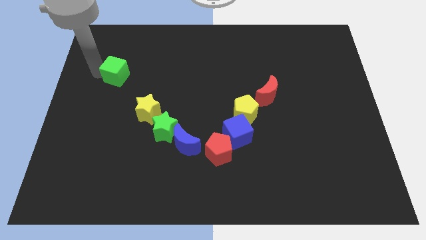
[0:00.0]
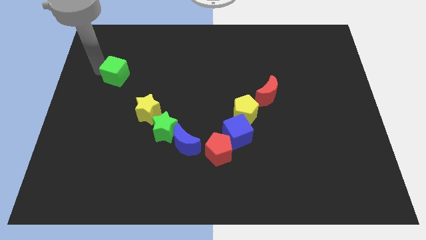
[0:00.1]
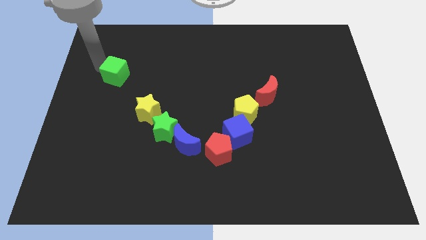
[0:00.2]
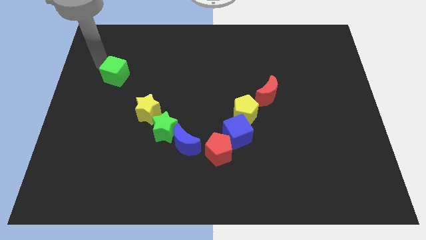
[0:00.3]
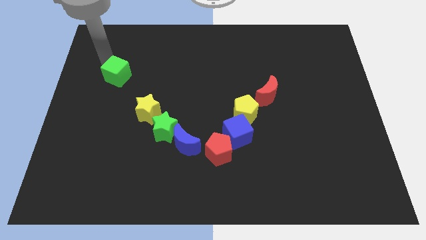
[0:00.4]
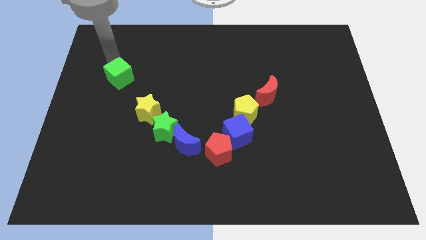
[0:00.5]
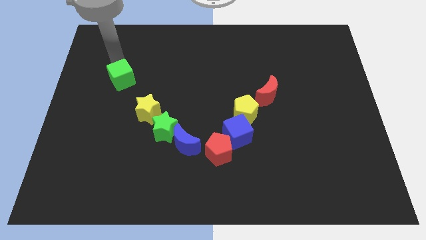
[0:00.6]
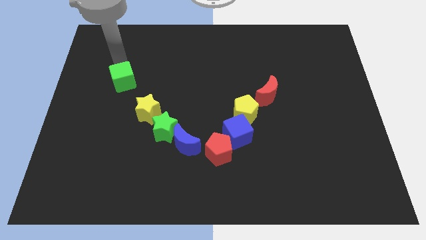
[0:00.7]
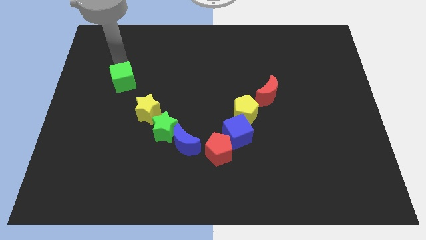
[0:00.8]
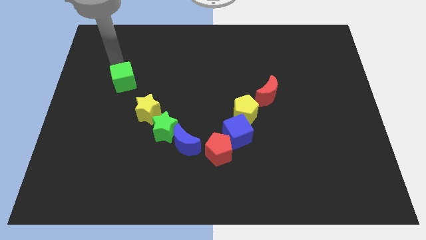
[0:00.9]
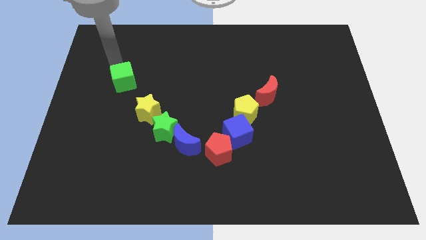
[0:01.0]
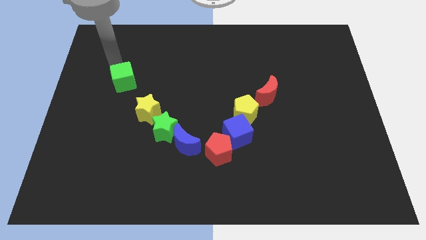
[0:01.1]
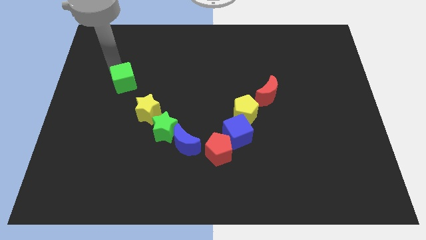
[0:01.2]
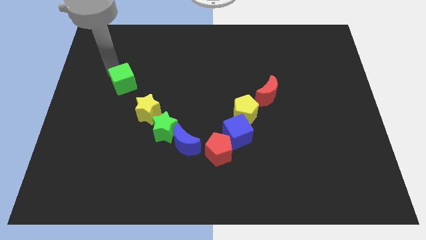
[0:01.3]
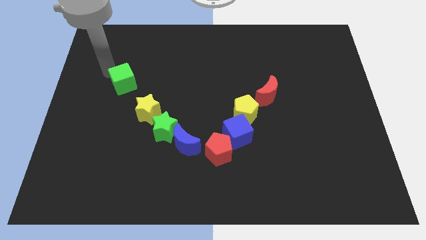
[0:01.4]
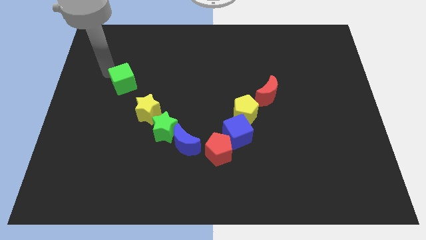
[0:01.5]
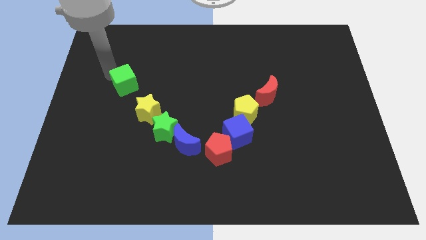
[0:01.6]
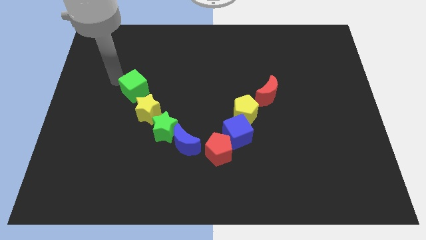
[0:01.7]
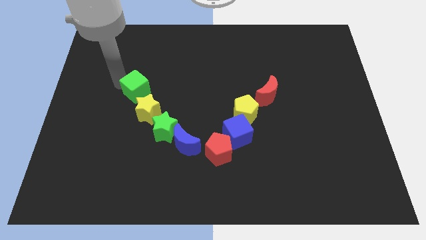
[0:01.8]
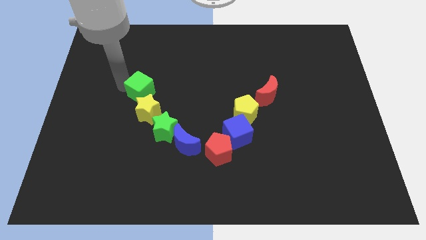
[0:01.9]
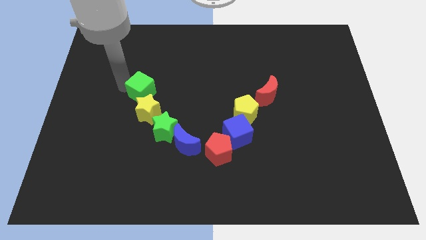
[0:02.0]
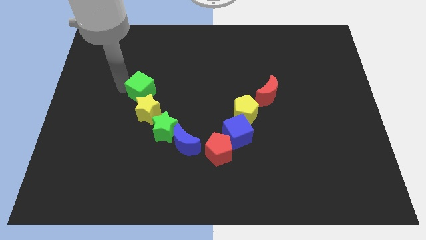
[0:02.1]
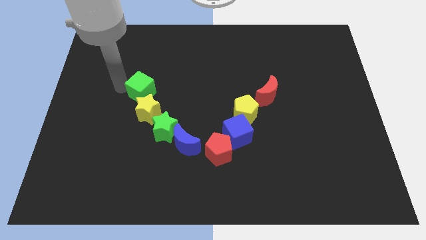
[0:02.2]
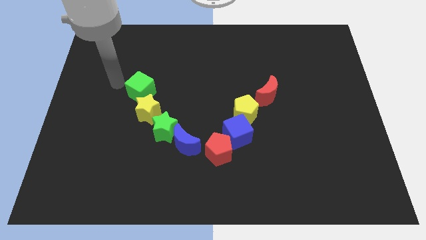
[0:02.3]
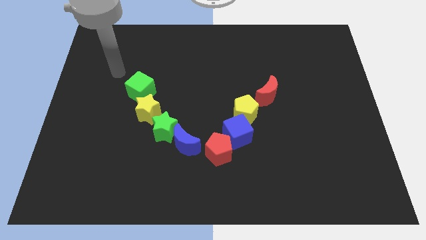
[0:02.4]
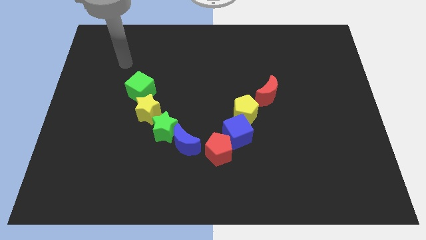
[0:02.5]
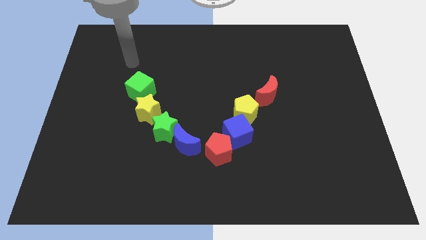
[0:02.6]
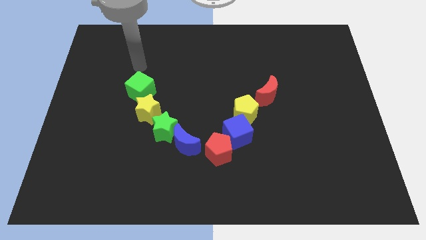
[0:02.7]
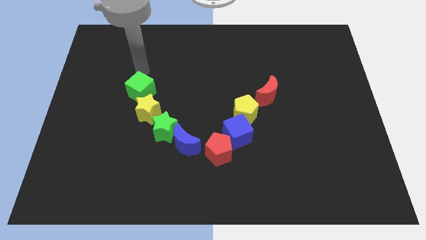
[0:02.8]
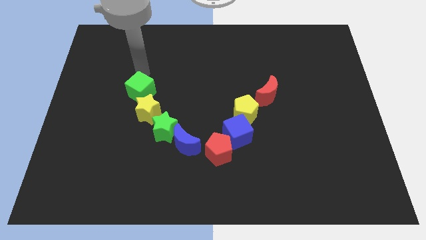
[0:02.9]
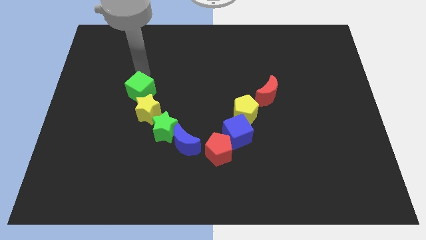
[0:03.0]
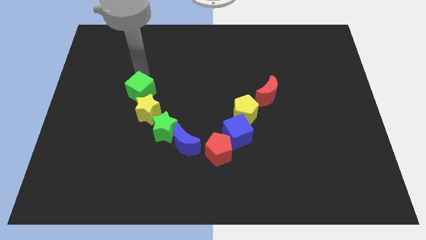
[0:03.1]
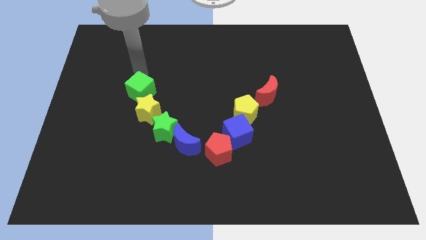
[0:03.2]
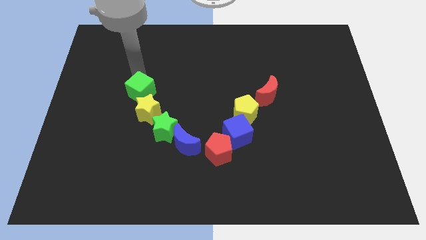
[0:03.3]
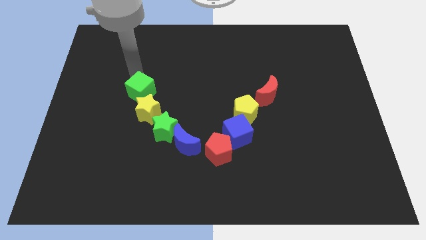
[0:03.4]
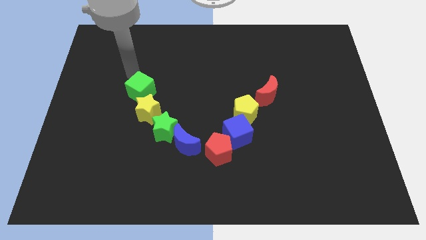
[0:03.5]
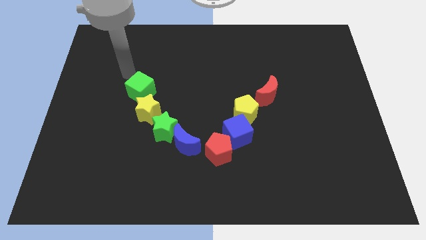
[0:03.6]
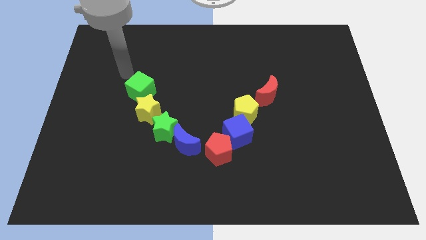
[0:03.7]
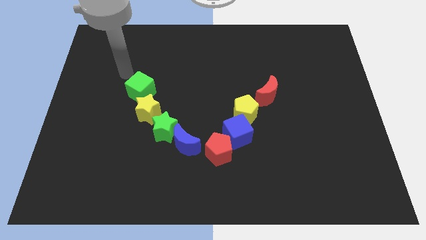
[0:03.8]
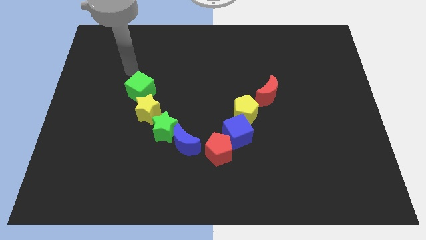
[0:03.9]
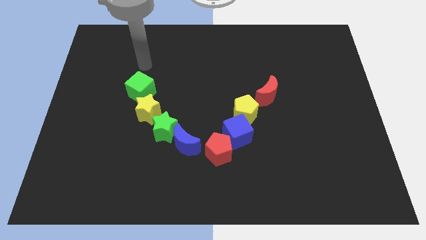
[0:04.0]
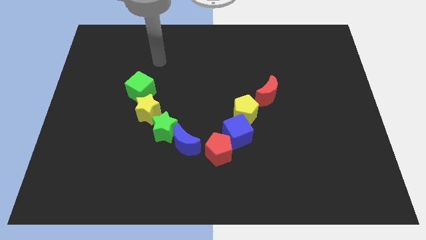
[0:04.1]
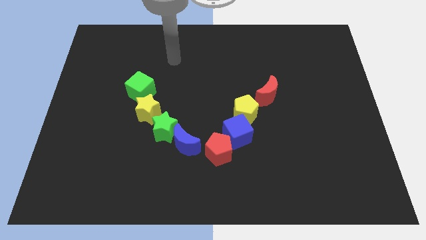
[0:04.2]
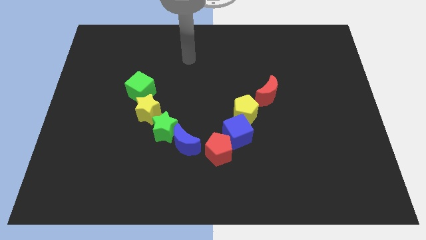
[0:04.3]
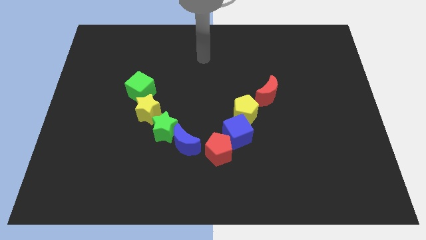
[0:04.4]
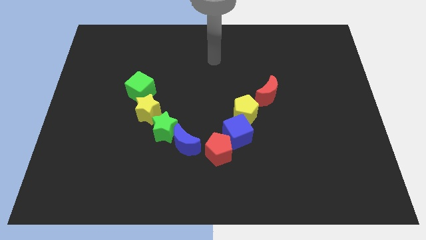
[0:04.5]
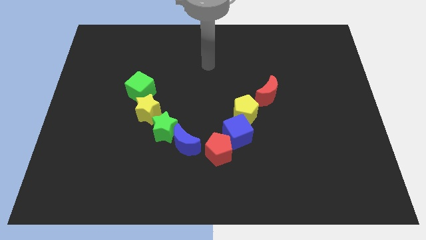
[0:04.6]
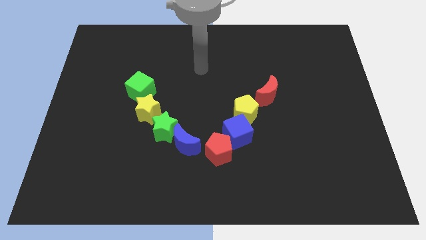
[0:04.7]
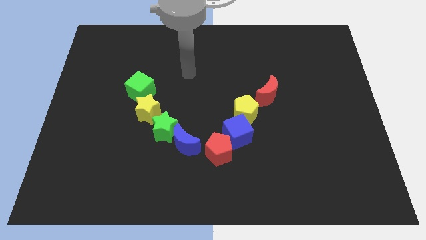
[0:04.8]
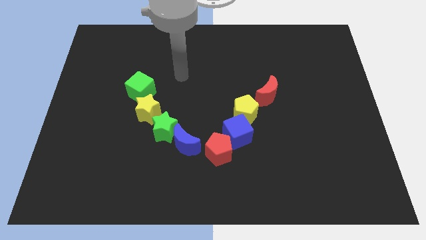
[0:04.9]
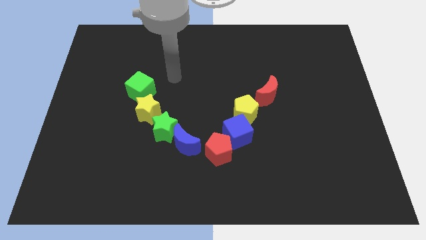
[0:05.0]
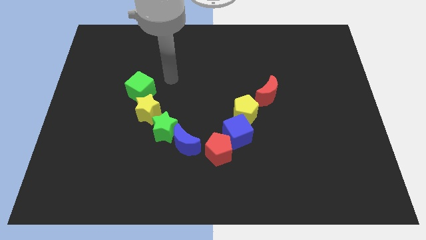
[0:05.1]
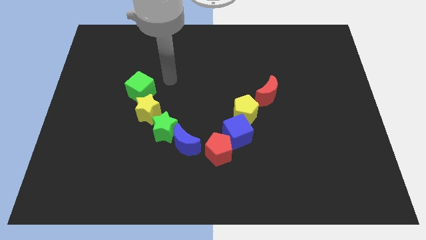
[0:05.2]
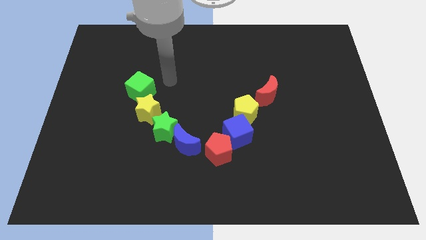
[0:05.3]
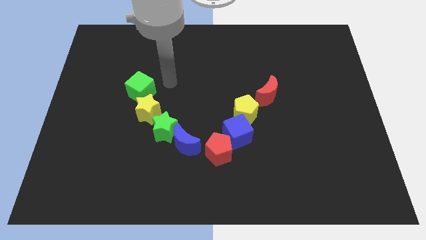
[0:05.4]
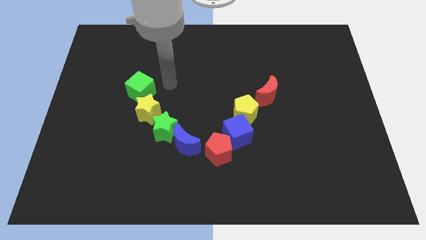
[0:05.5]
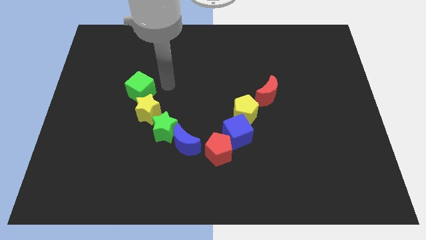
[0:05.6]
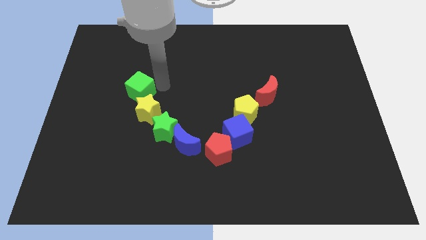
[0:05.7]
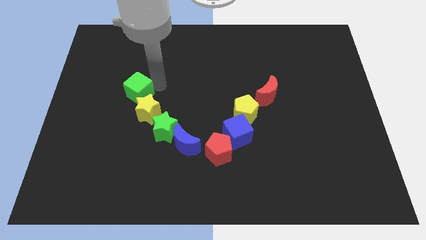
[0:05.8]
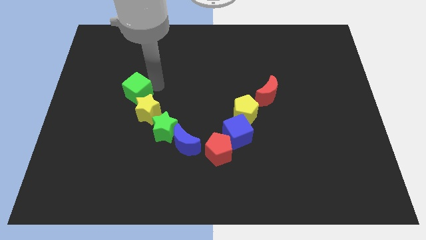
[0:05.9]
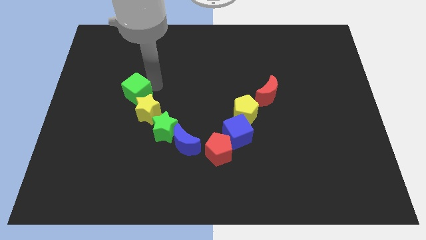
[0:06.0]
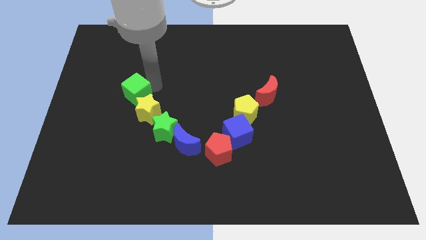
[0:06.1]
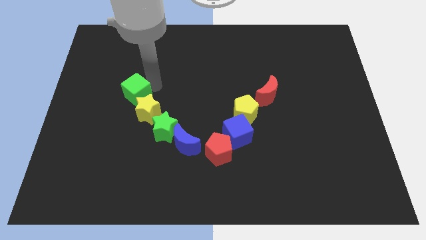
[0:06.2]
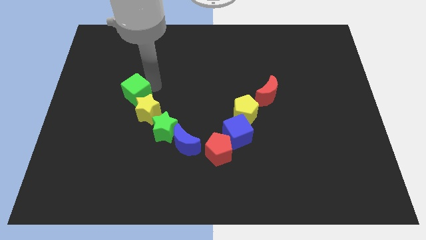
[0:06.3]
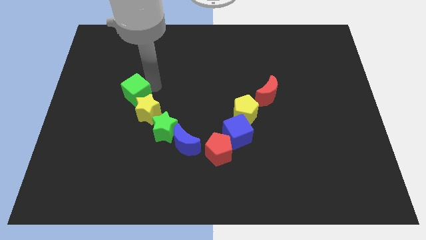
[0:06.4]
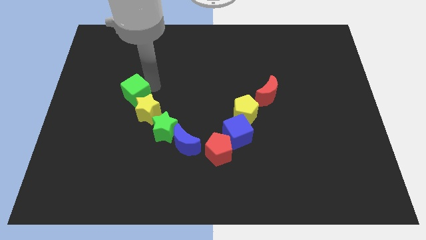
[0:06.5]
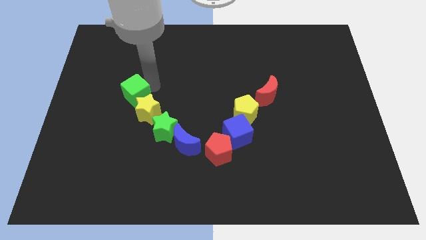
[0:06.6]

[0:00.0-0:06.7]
place the green cube above the yellow star

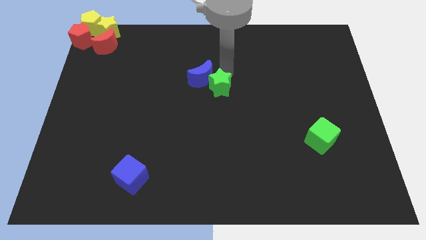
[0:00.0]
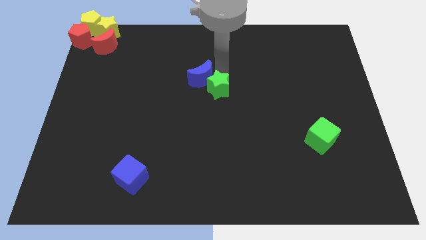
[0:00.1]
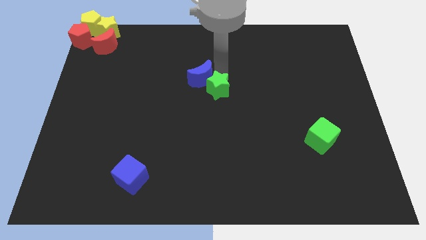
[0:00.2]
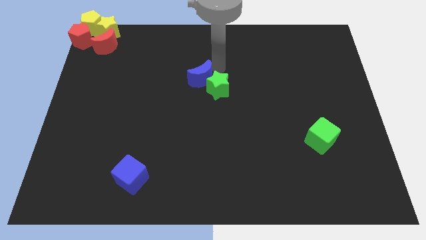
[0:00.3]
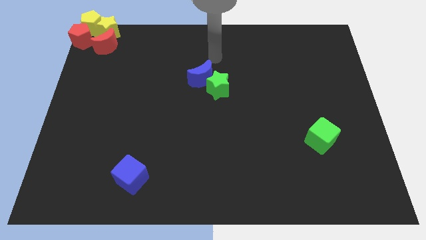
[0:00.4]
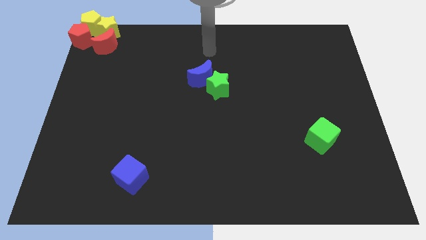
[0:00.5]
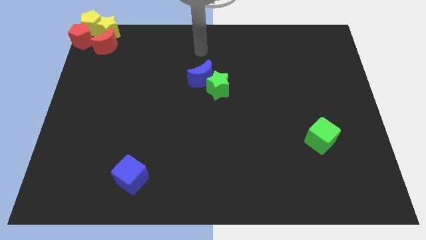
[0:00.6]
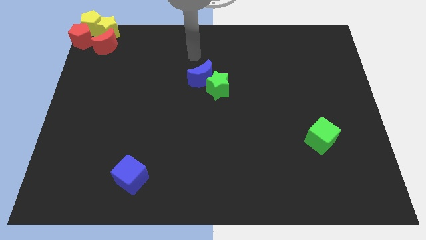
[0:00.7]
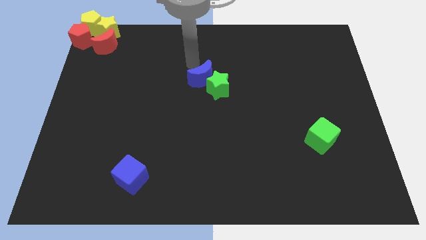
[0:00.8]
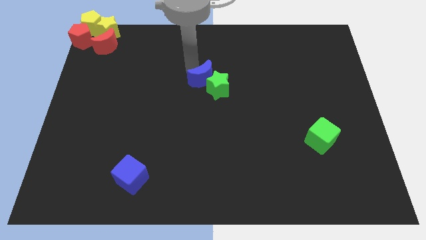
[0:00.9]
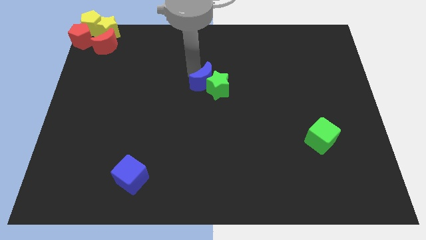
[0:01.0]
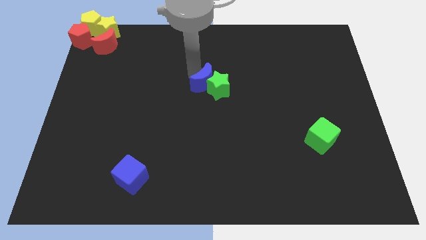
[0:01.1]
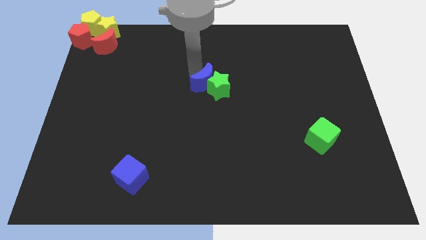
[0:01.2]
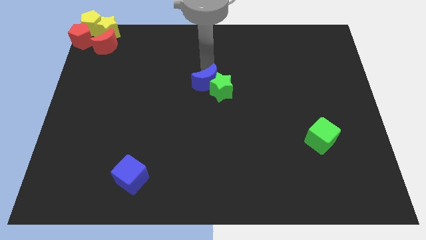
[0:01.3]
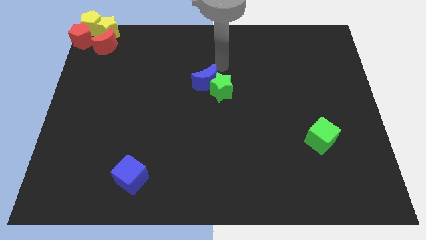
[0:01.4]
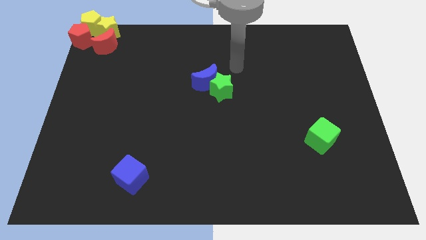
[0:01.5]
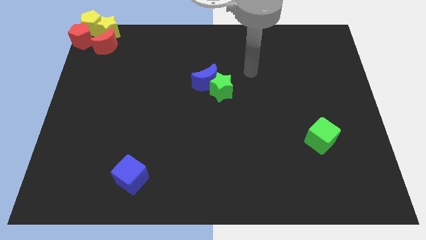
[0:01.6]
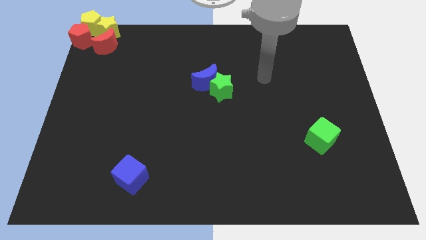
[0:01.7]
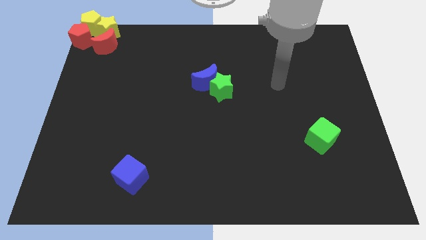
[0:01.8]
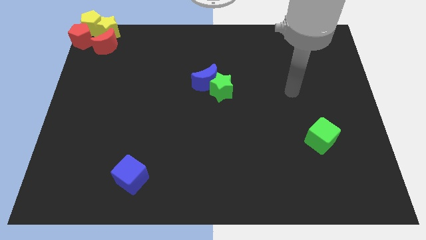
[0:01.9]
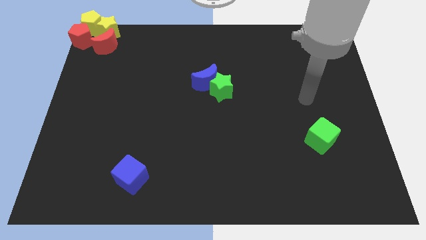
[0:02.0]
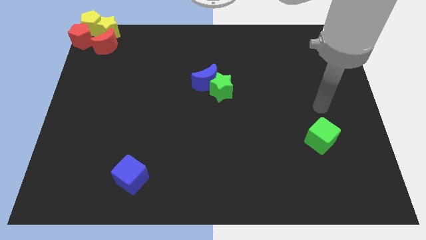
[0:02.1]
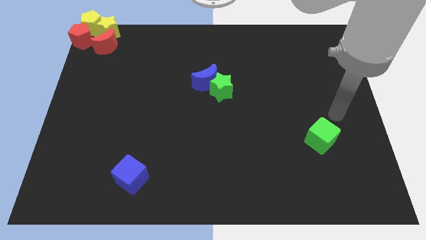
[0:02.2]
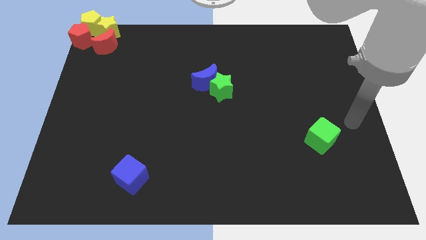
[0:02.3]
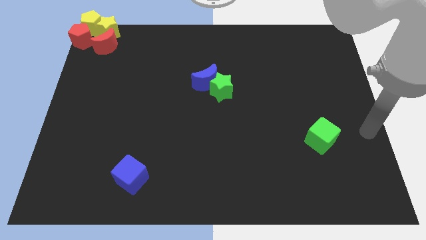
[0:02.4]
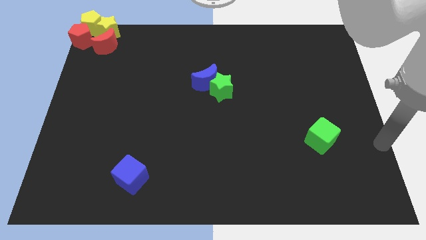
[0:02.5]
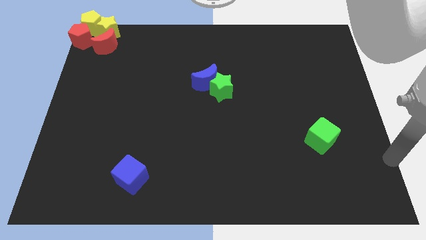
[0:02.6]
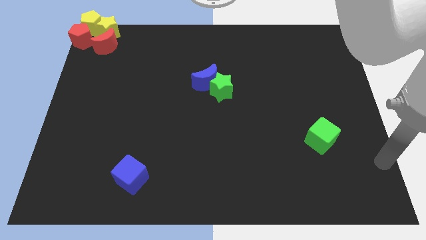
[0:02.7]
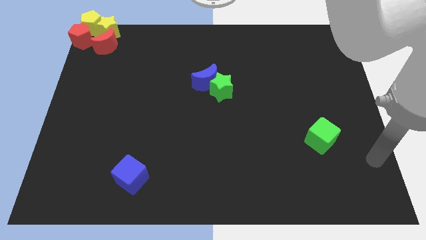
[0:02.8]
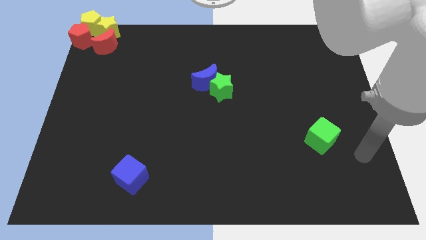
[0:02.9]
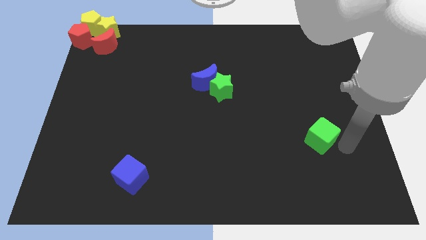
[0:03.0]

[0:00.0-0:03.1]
point your arm close to green cube
